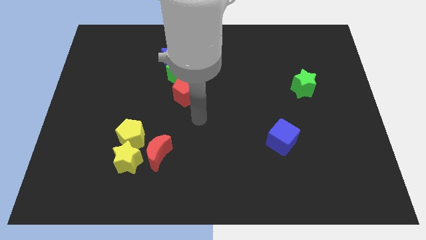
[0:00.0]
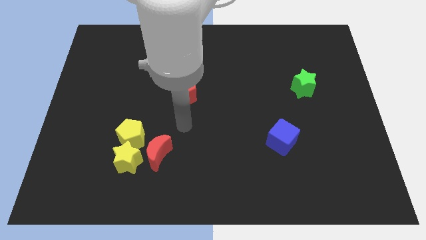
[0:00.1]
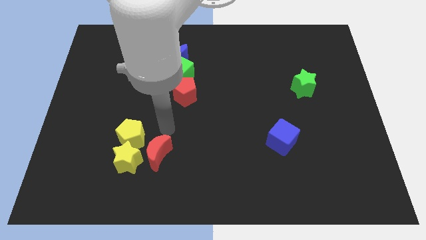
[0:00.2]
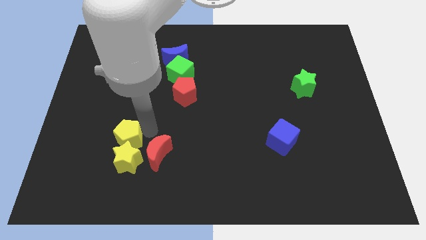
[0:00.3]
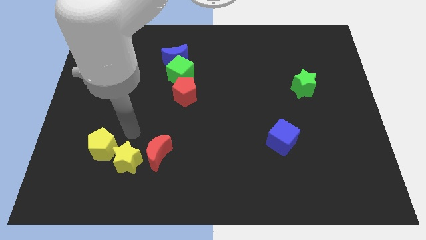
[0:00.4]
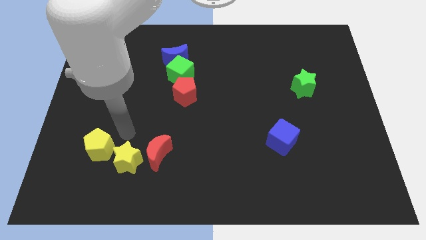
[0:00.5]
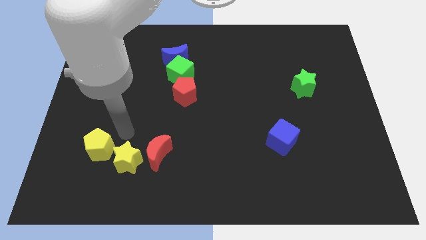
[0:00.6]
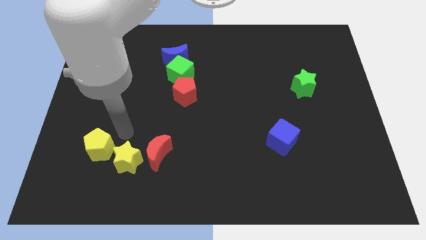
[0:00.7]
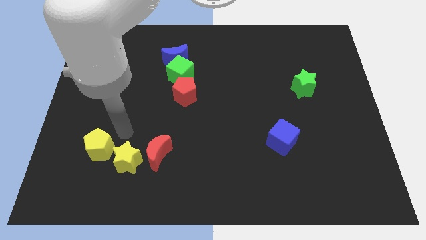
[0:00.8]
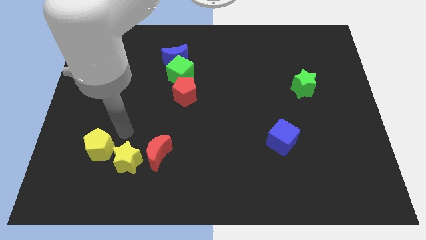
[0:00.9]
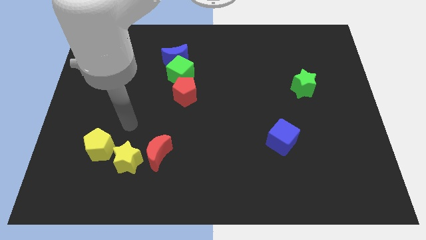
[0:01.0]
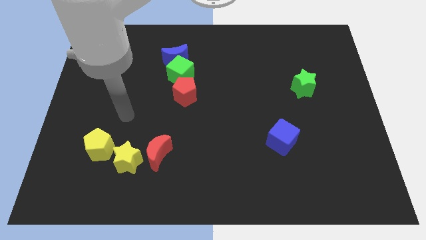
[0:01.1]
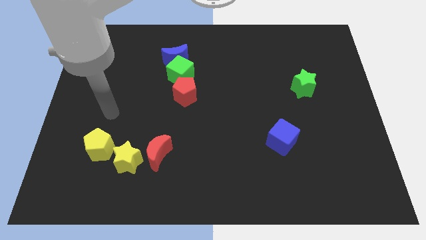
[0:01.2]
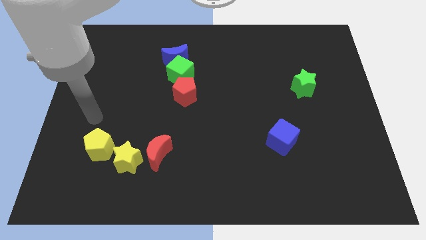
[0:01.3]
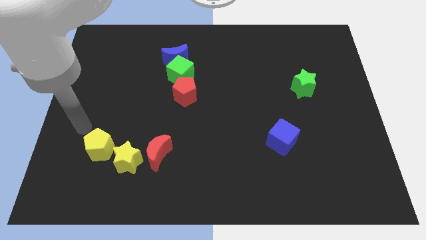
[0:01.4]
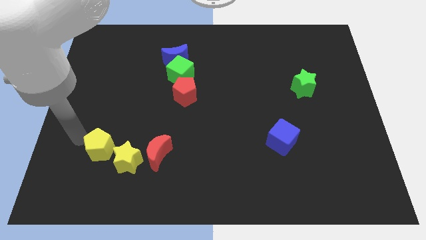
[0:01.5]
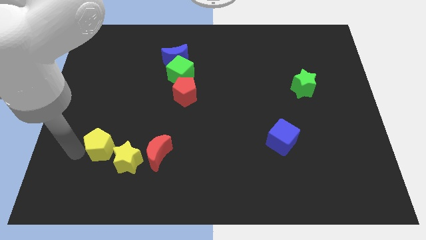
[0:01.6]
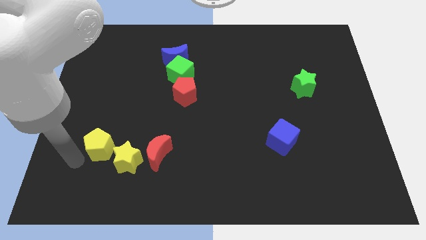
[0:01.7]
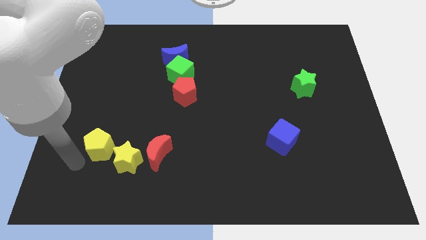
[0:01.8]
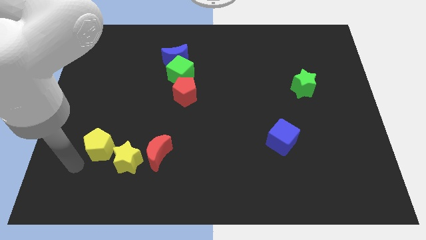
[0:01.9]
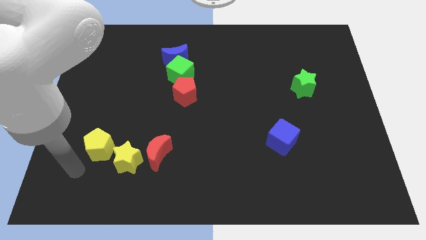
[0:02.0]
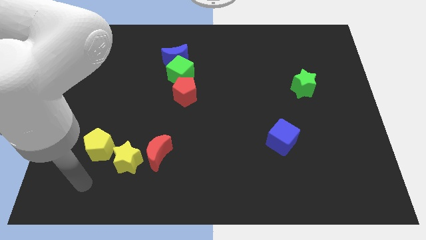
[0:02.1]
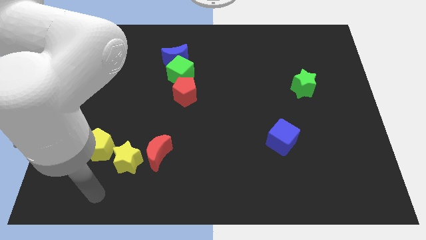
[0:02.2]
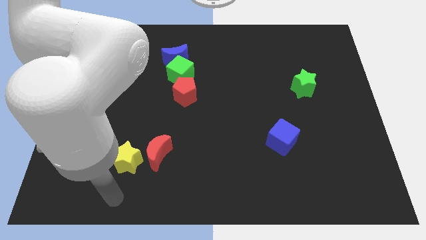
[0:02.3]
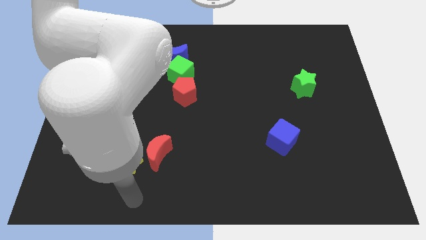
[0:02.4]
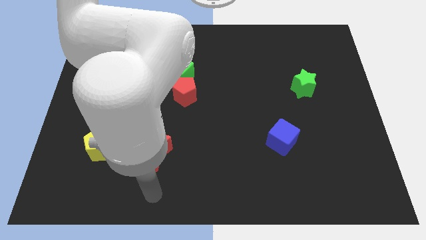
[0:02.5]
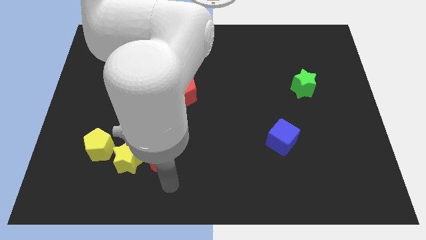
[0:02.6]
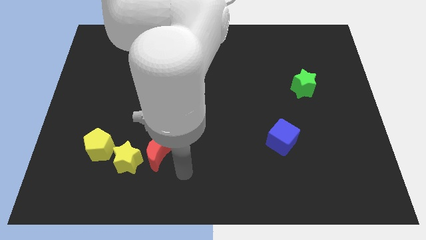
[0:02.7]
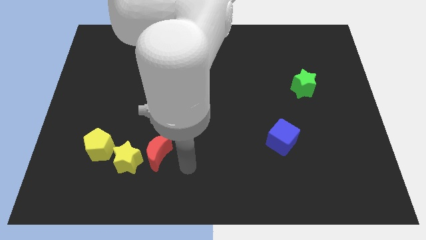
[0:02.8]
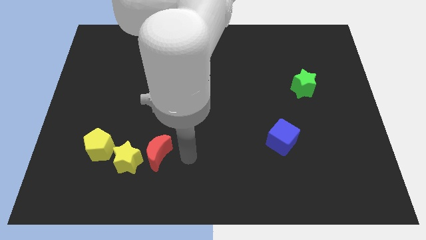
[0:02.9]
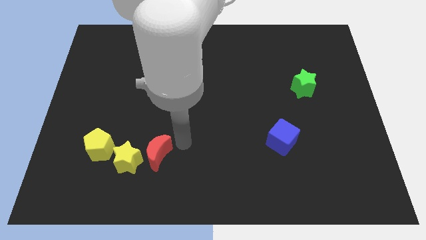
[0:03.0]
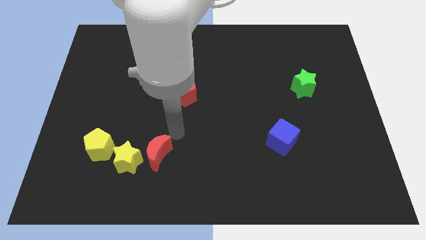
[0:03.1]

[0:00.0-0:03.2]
push the yellow pentagon towards bottom left side of the board

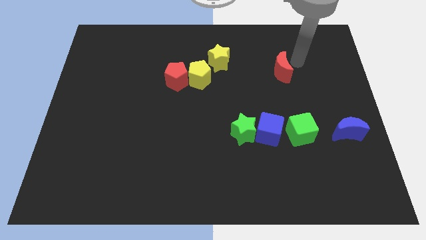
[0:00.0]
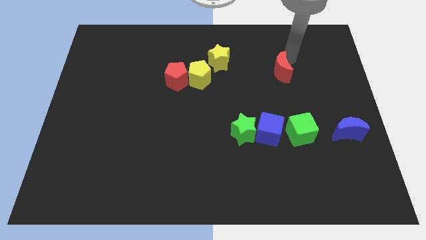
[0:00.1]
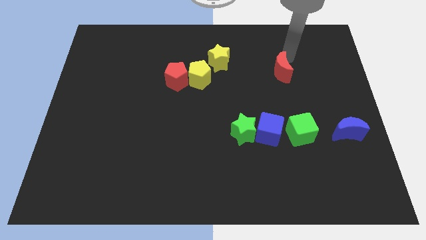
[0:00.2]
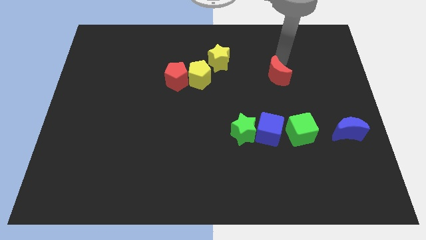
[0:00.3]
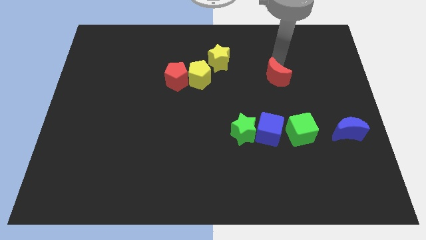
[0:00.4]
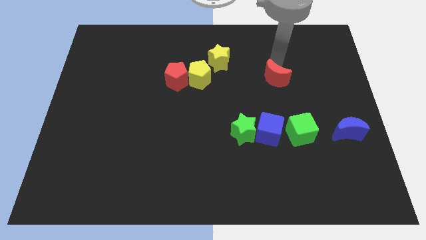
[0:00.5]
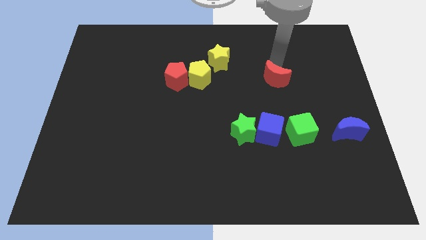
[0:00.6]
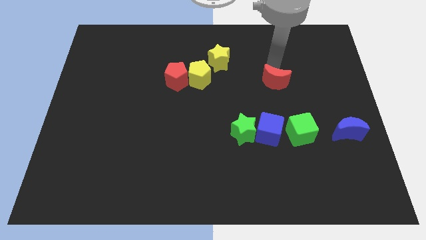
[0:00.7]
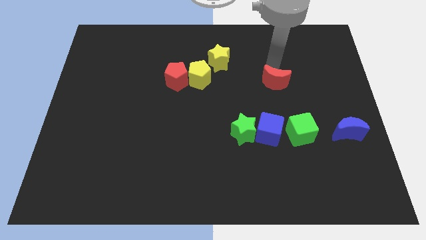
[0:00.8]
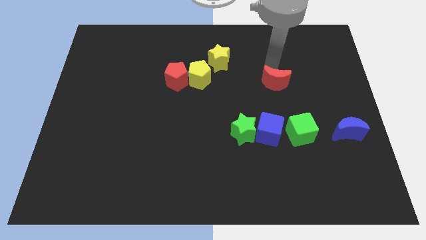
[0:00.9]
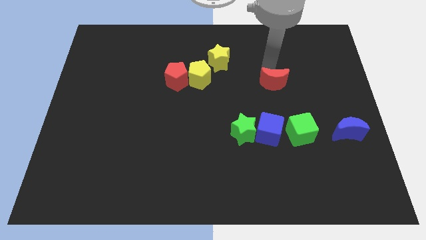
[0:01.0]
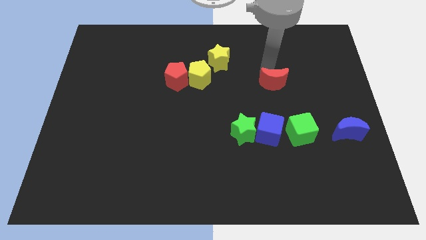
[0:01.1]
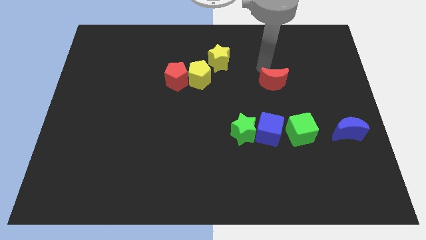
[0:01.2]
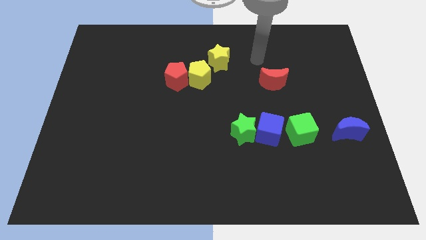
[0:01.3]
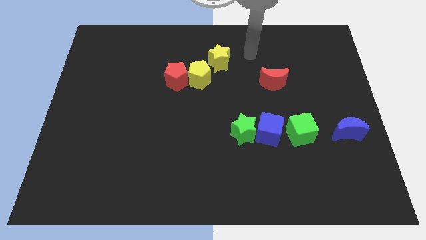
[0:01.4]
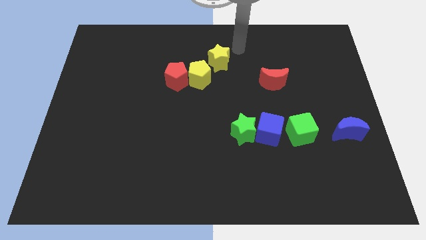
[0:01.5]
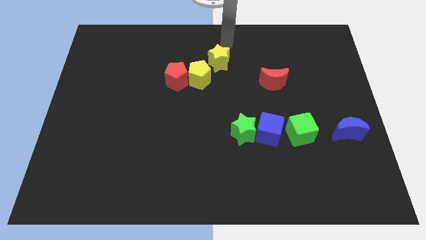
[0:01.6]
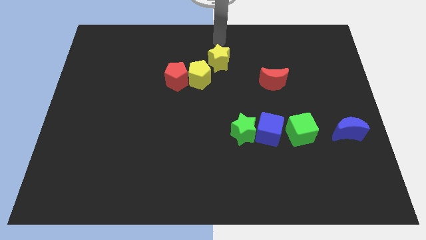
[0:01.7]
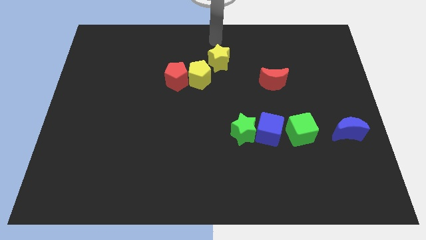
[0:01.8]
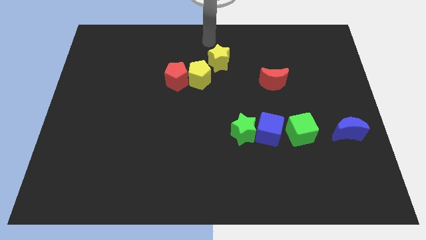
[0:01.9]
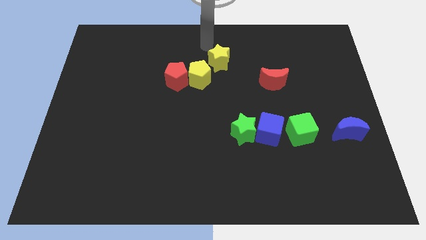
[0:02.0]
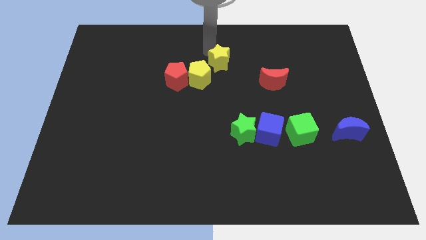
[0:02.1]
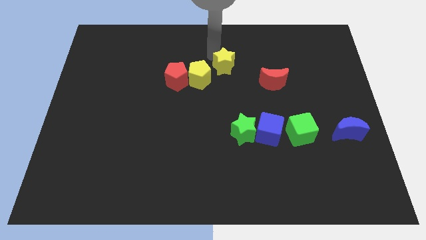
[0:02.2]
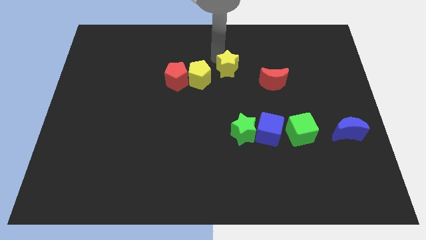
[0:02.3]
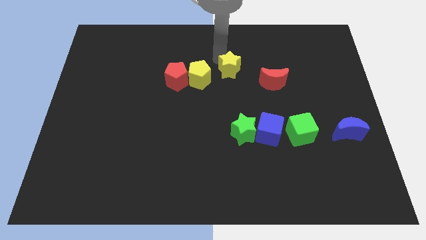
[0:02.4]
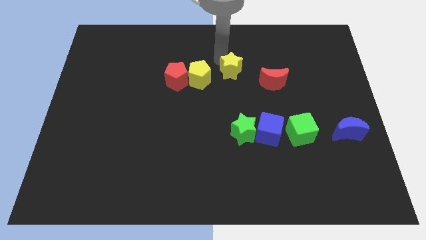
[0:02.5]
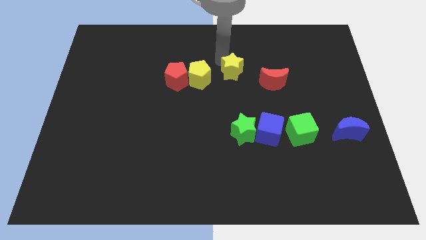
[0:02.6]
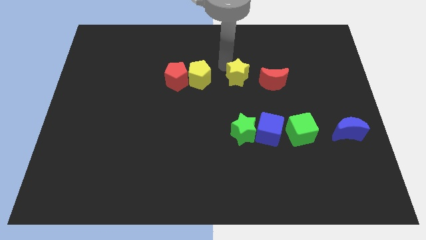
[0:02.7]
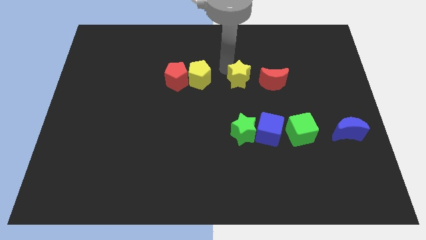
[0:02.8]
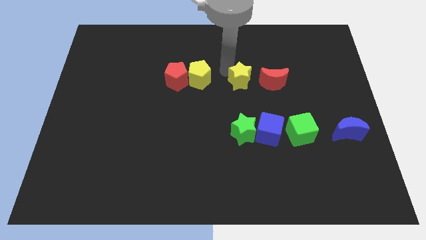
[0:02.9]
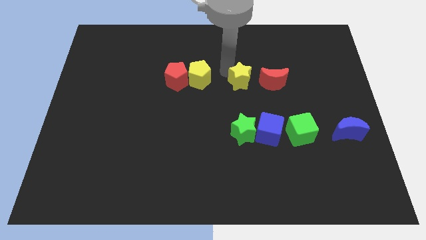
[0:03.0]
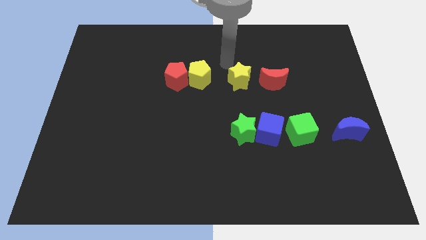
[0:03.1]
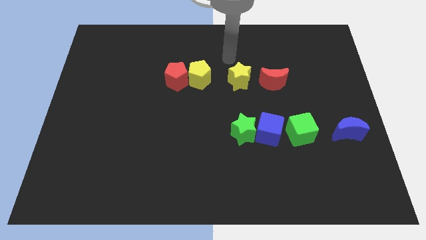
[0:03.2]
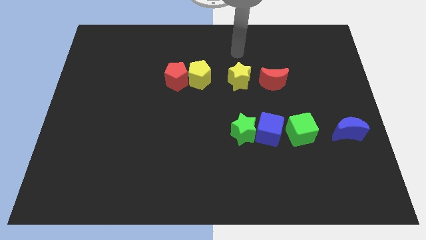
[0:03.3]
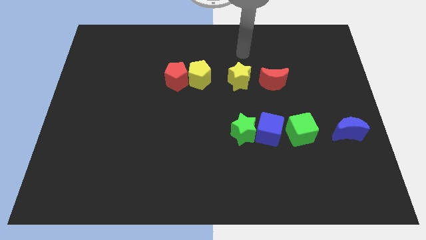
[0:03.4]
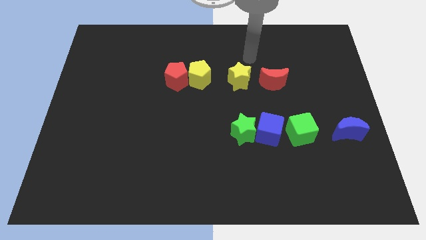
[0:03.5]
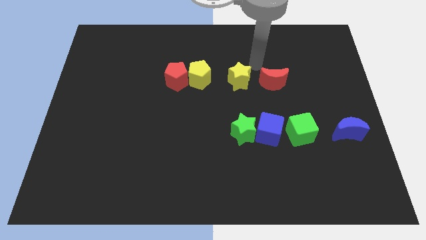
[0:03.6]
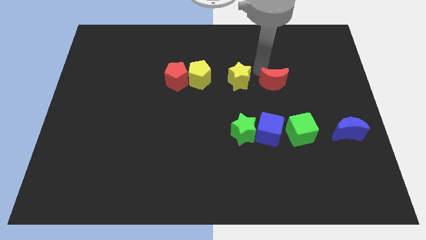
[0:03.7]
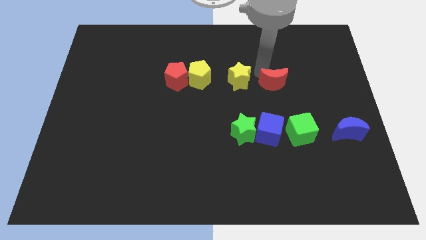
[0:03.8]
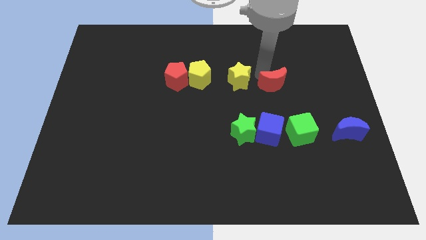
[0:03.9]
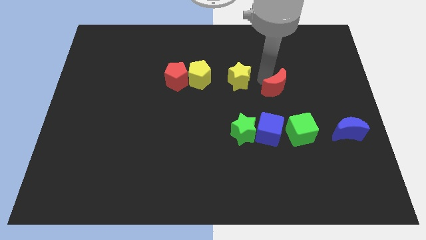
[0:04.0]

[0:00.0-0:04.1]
move the yellow star above the green star

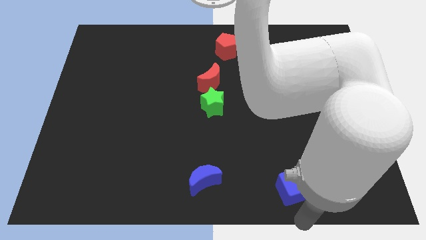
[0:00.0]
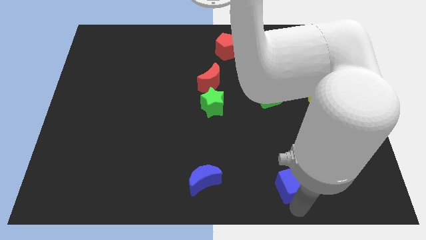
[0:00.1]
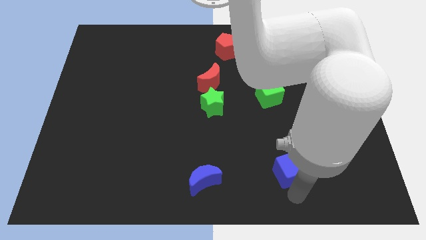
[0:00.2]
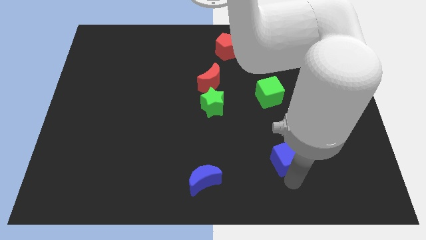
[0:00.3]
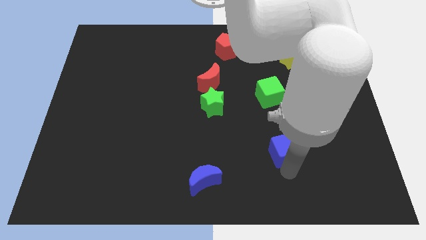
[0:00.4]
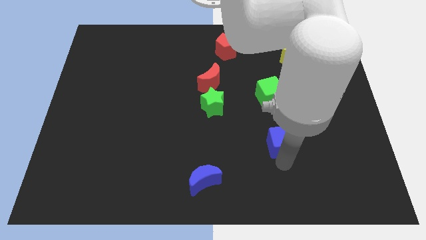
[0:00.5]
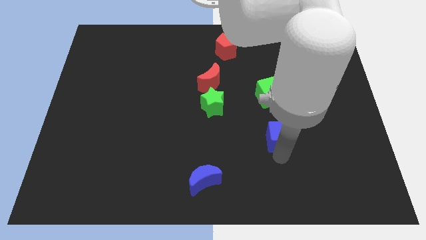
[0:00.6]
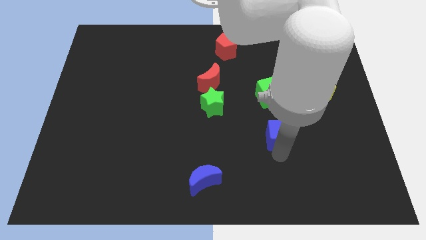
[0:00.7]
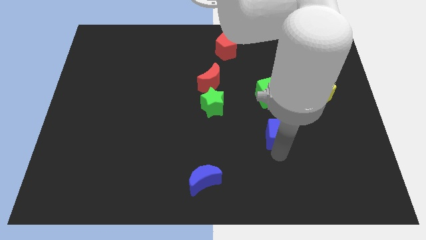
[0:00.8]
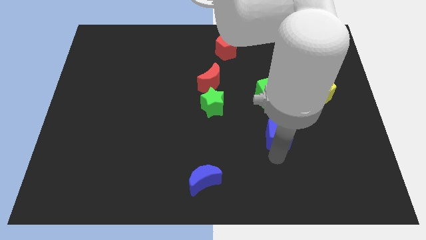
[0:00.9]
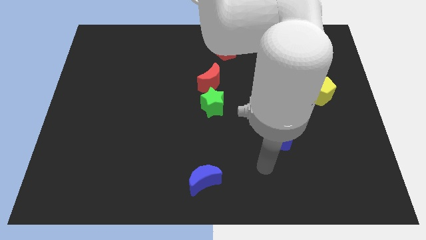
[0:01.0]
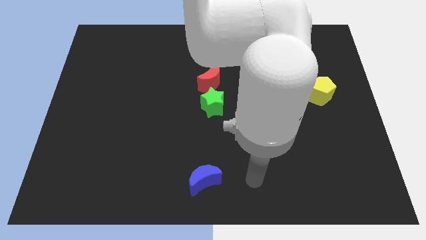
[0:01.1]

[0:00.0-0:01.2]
push the blue cube towards the green cube

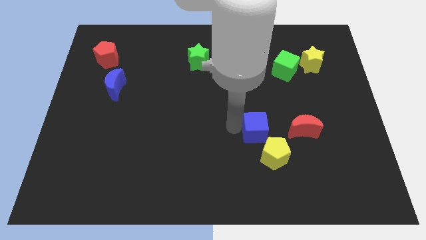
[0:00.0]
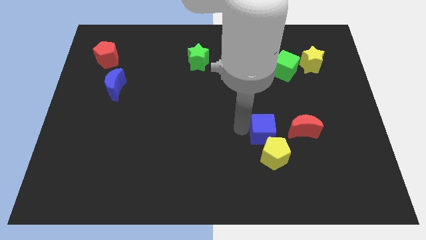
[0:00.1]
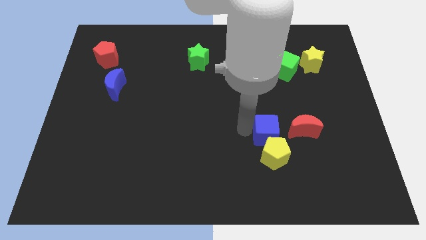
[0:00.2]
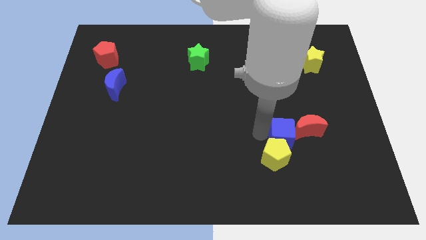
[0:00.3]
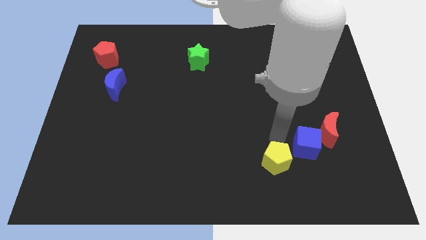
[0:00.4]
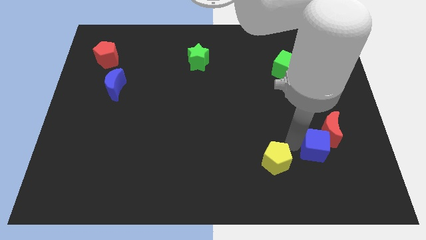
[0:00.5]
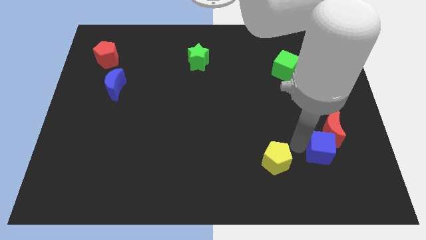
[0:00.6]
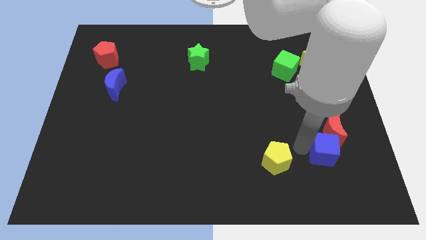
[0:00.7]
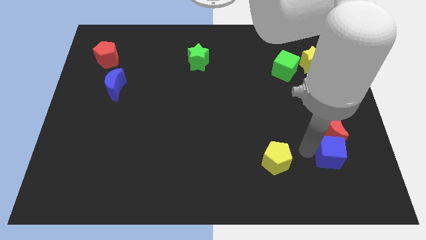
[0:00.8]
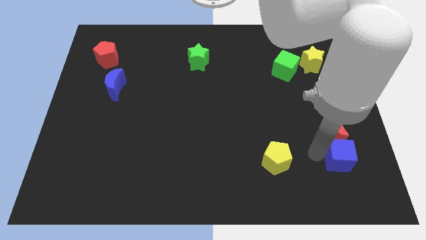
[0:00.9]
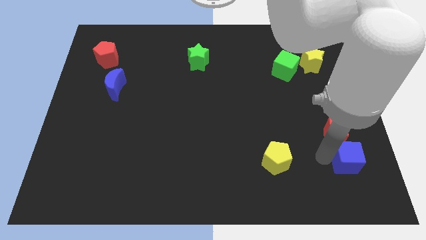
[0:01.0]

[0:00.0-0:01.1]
move the blue cube to the bottom of the red crescent
